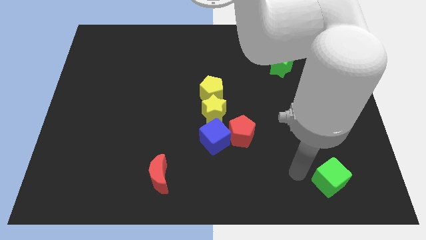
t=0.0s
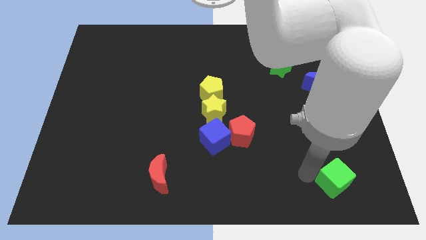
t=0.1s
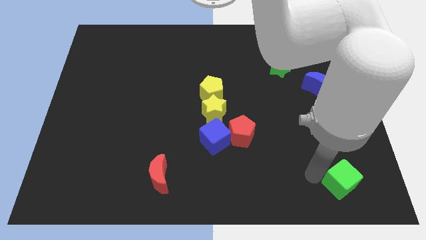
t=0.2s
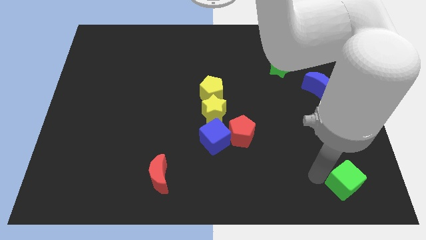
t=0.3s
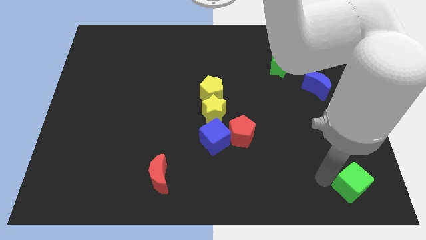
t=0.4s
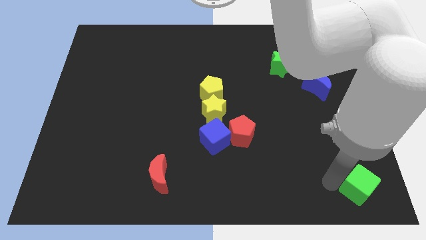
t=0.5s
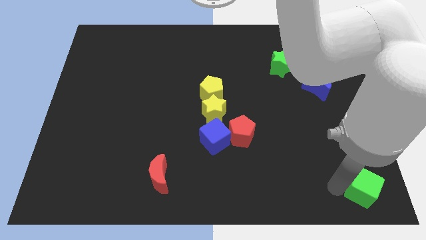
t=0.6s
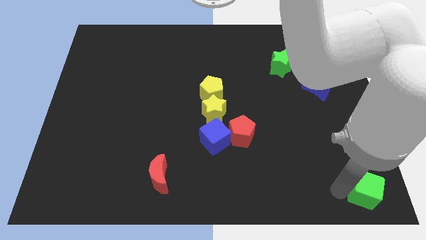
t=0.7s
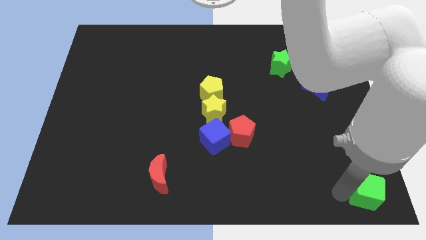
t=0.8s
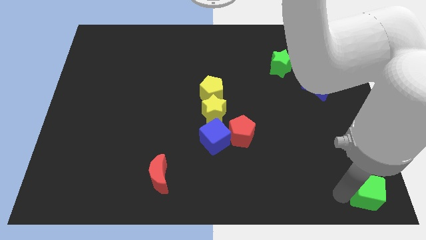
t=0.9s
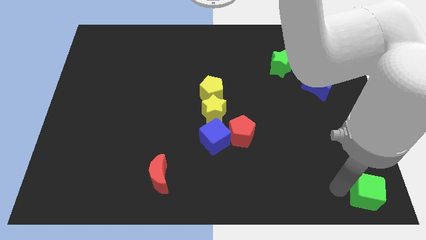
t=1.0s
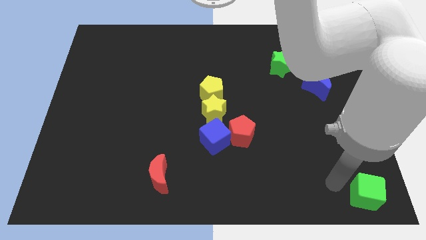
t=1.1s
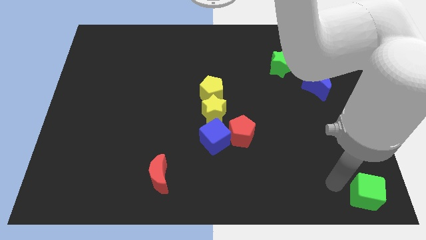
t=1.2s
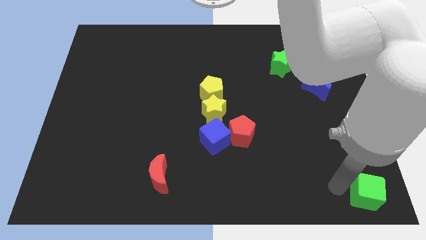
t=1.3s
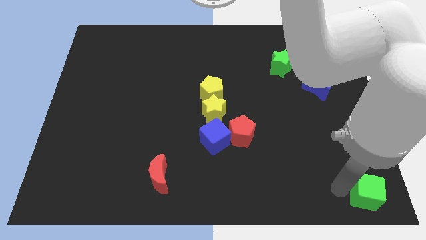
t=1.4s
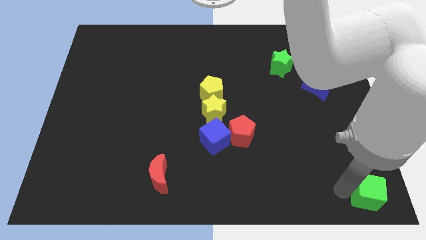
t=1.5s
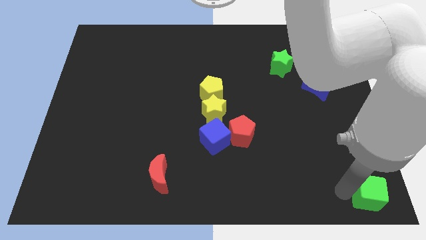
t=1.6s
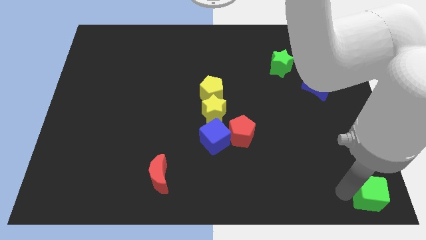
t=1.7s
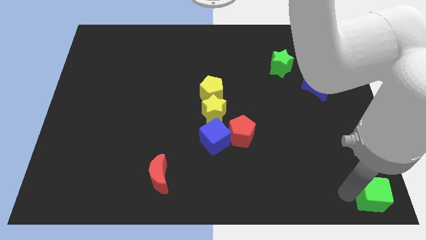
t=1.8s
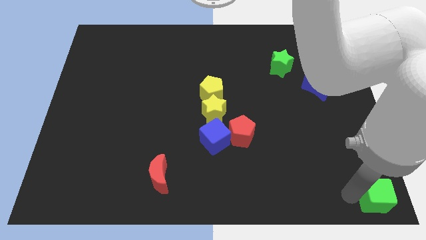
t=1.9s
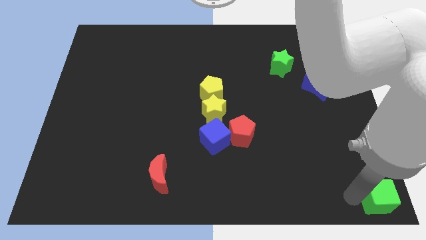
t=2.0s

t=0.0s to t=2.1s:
place the green cube at the bottom right corner of the board

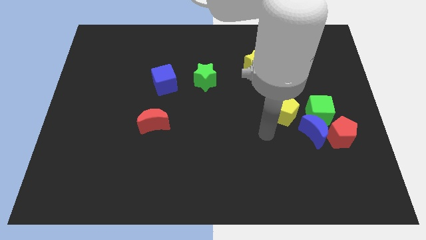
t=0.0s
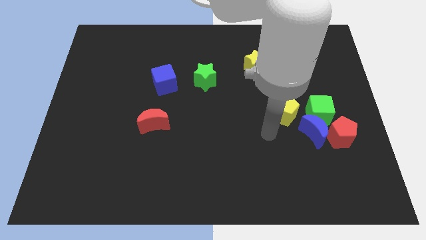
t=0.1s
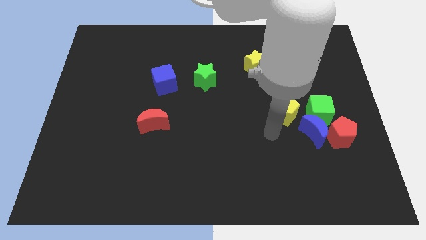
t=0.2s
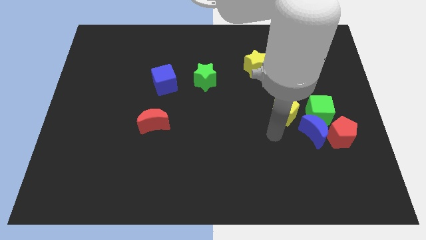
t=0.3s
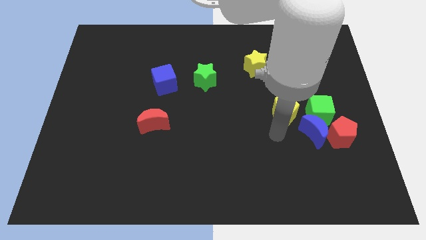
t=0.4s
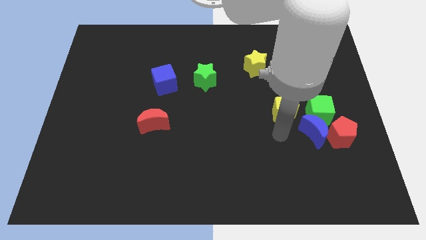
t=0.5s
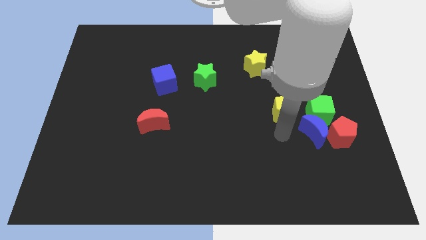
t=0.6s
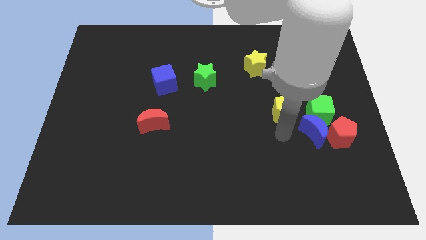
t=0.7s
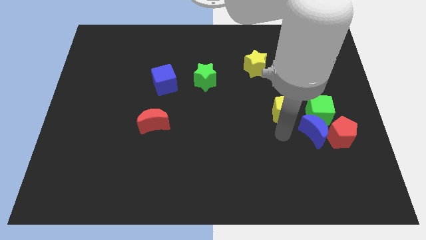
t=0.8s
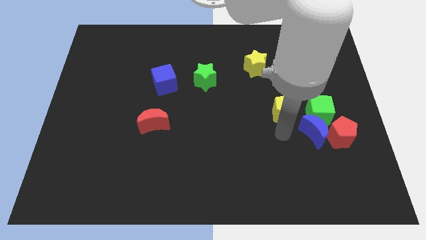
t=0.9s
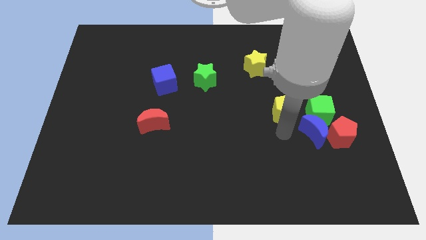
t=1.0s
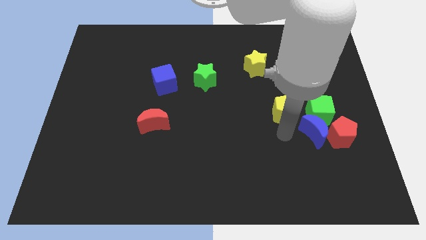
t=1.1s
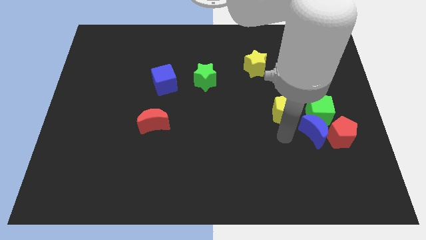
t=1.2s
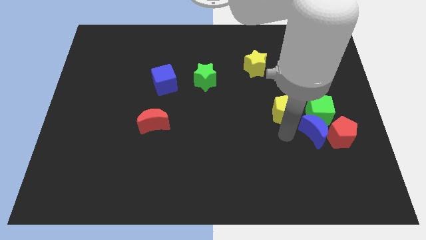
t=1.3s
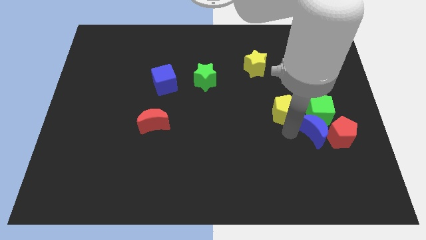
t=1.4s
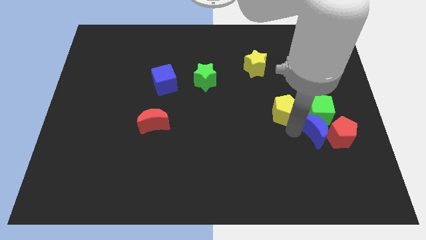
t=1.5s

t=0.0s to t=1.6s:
move your arm towards blue crescent

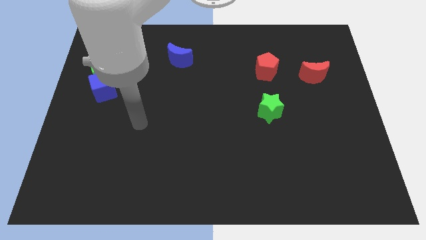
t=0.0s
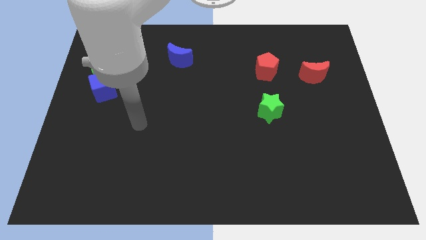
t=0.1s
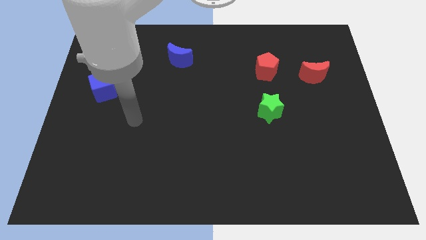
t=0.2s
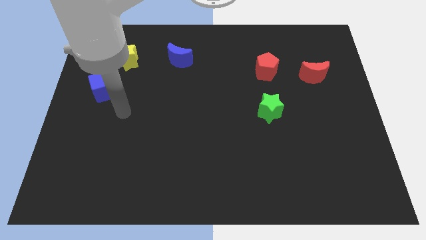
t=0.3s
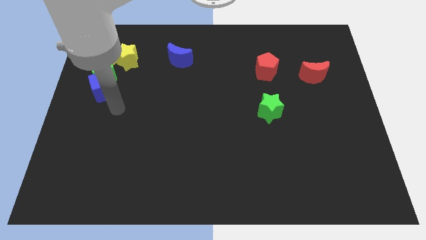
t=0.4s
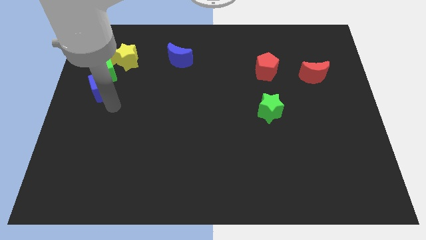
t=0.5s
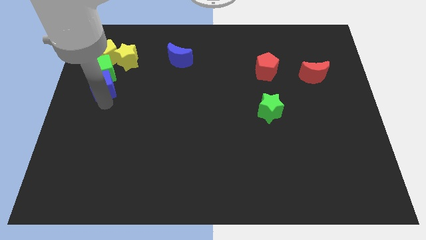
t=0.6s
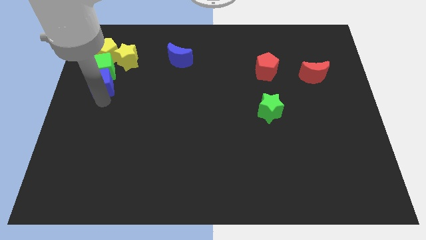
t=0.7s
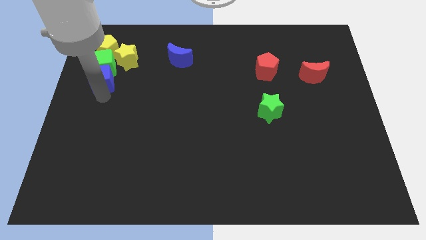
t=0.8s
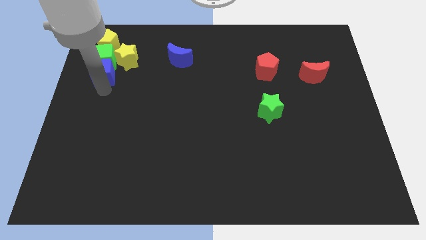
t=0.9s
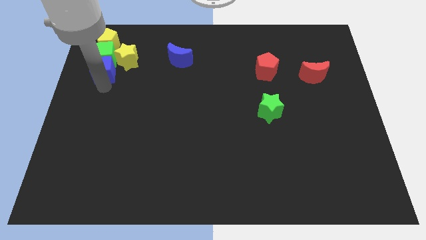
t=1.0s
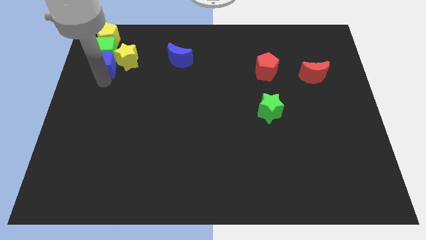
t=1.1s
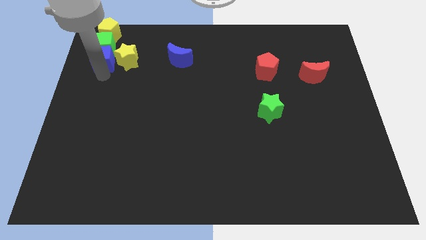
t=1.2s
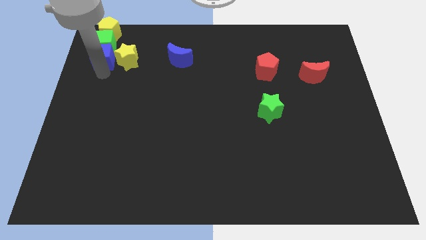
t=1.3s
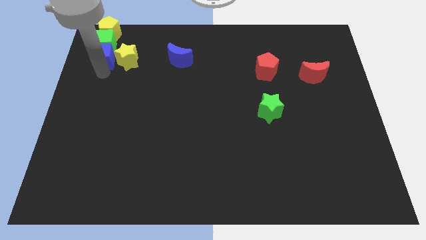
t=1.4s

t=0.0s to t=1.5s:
push the blue cube into the green star and yellow pentagon

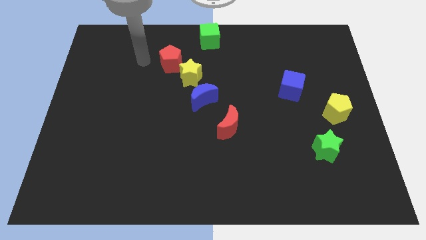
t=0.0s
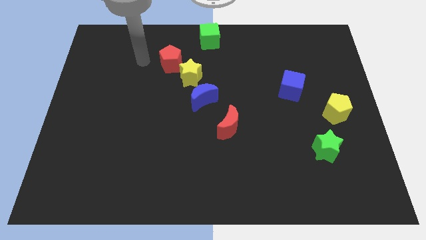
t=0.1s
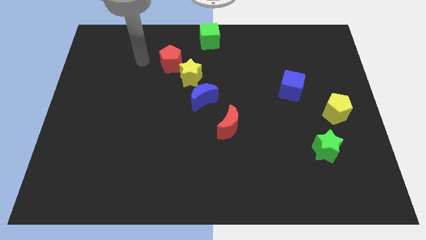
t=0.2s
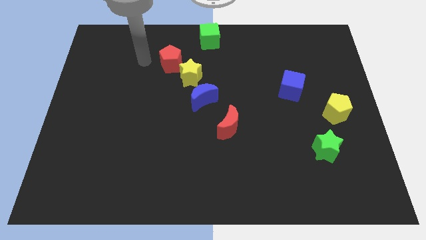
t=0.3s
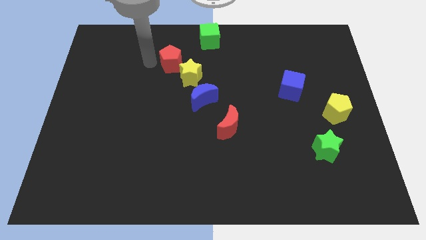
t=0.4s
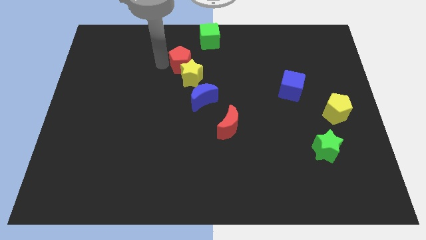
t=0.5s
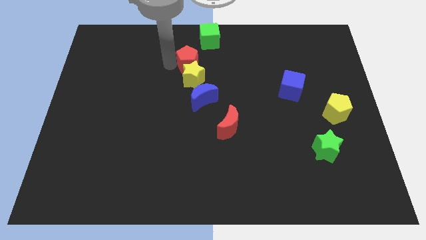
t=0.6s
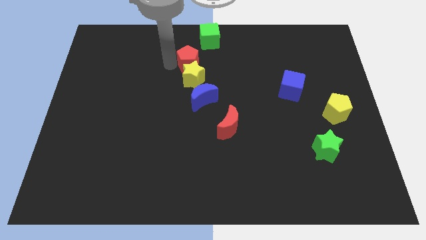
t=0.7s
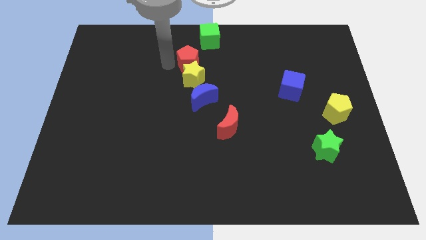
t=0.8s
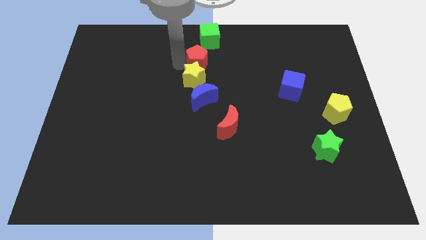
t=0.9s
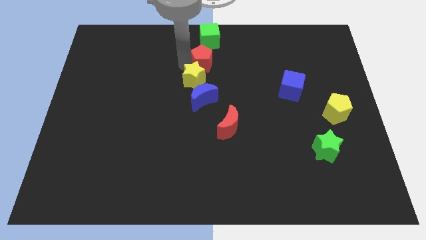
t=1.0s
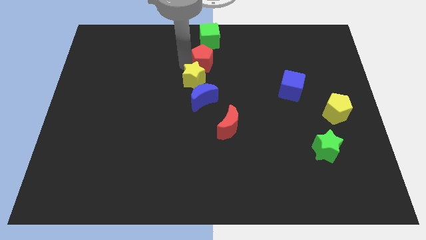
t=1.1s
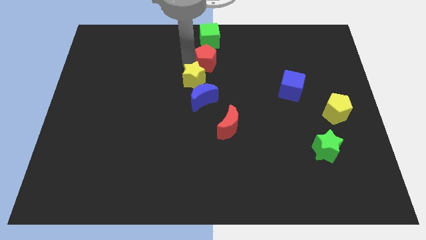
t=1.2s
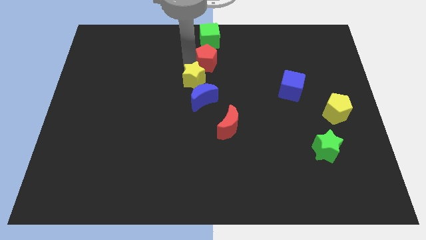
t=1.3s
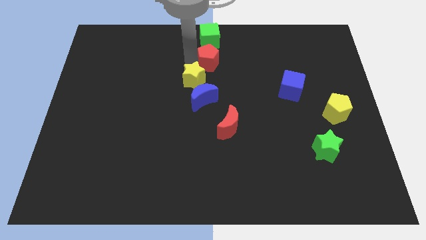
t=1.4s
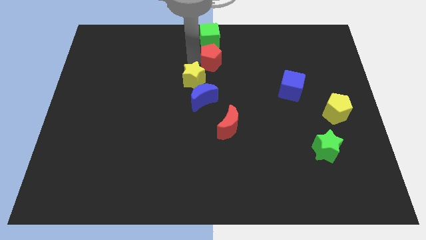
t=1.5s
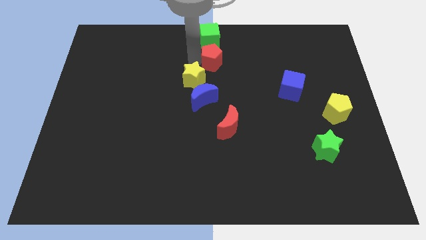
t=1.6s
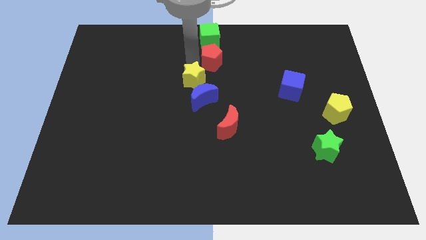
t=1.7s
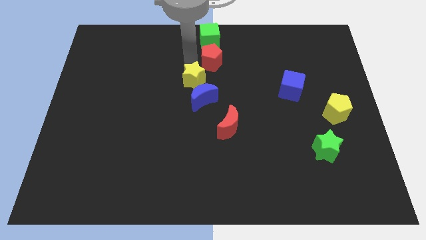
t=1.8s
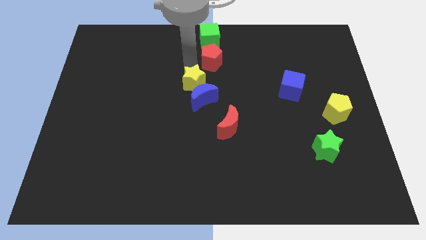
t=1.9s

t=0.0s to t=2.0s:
push the red pentagon to the bottom side of the green cube

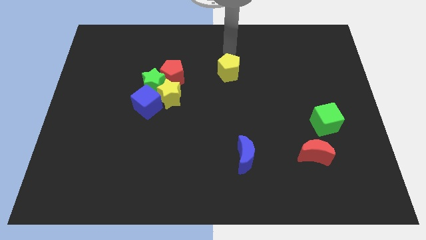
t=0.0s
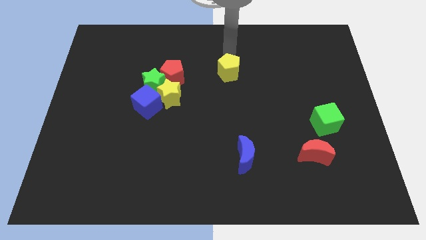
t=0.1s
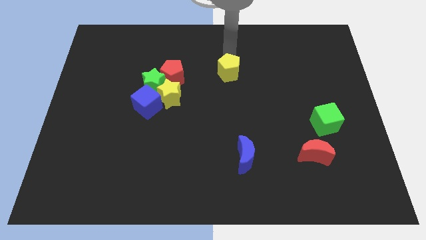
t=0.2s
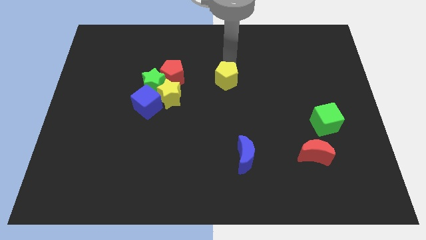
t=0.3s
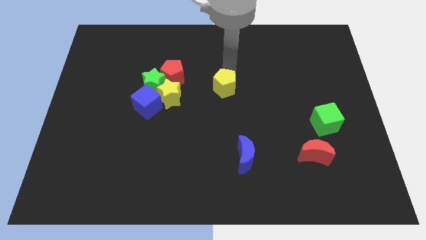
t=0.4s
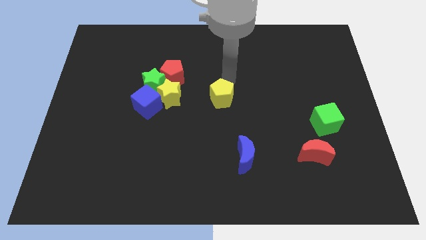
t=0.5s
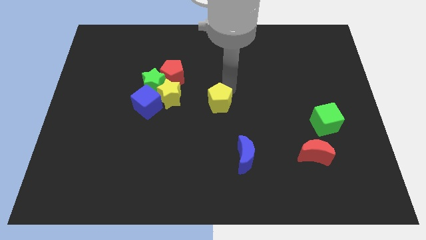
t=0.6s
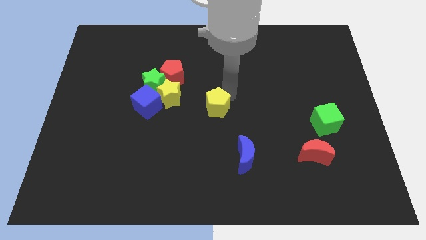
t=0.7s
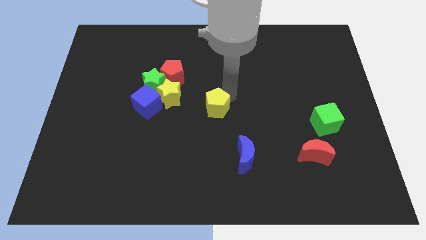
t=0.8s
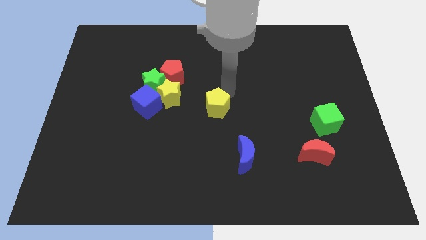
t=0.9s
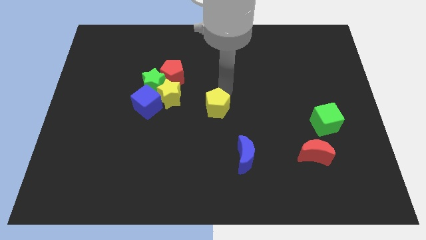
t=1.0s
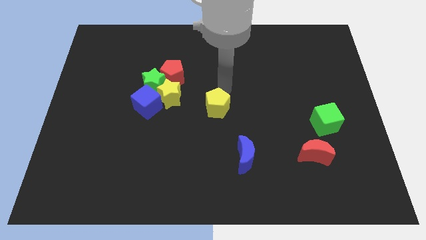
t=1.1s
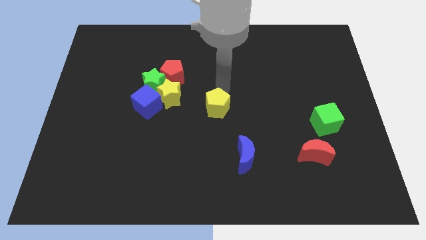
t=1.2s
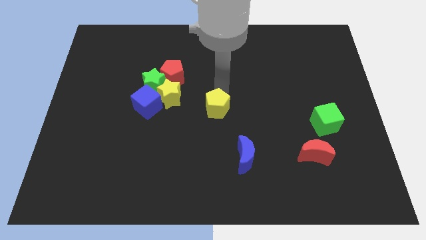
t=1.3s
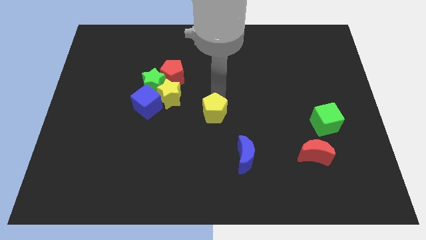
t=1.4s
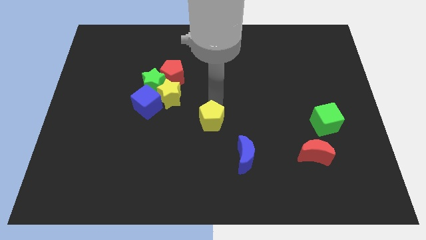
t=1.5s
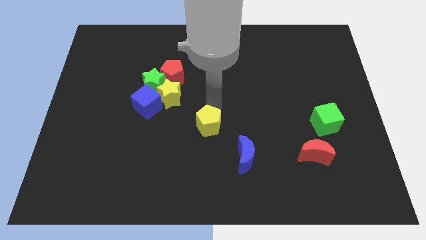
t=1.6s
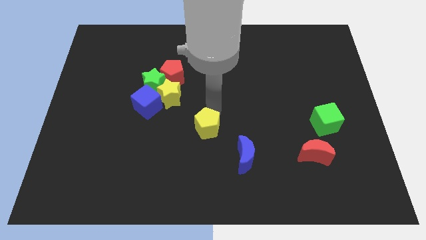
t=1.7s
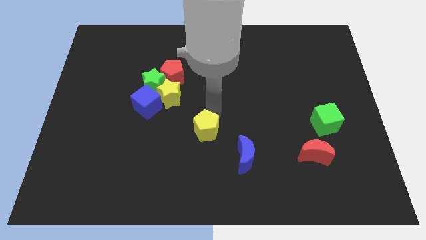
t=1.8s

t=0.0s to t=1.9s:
move the yellow pentagon diagonally left of the blue crescent
